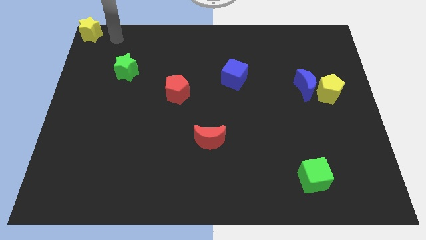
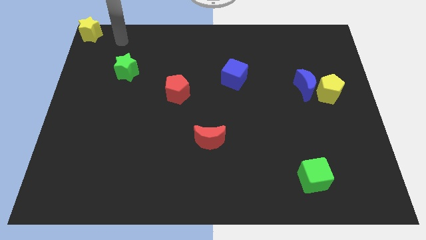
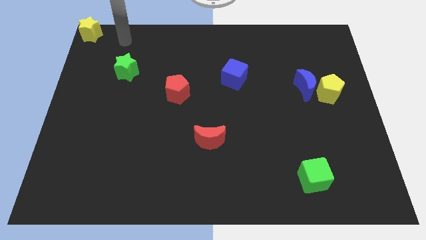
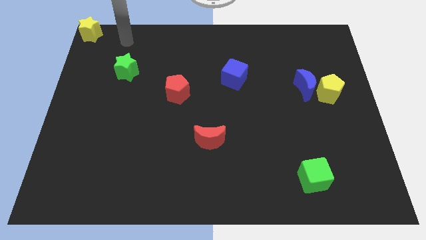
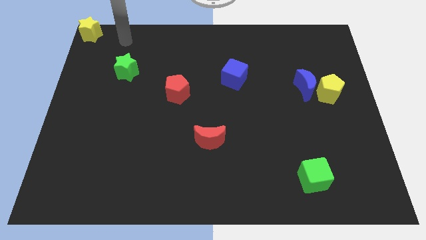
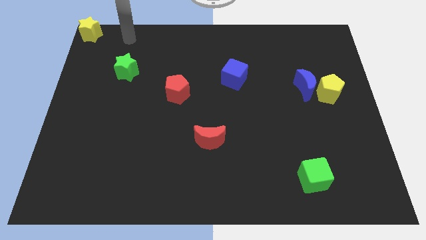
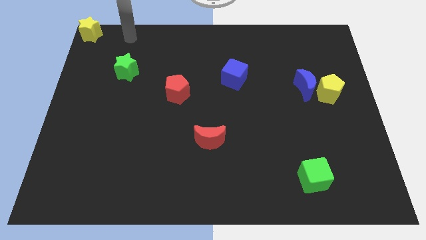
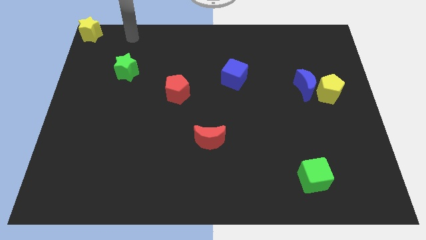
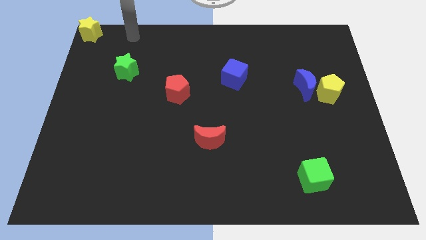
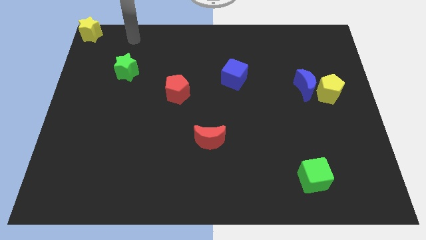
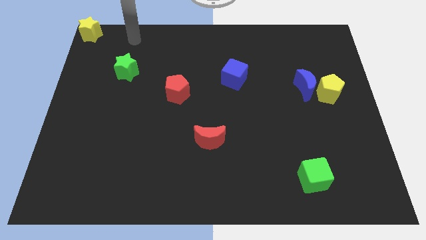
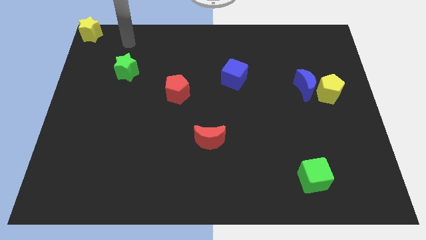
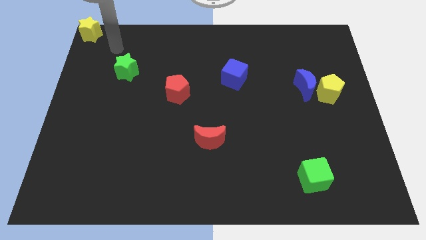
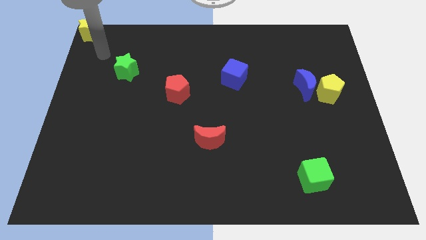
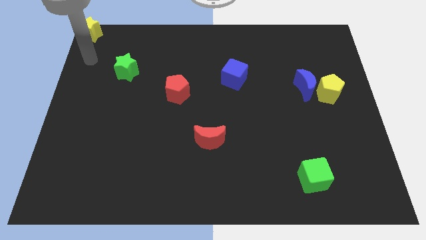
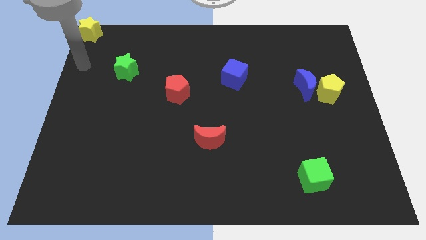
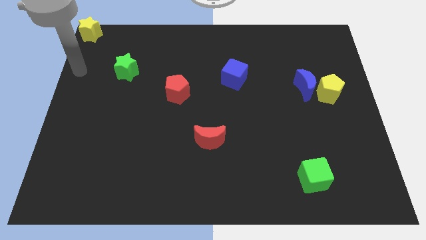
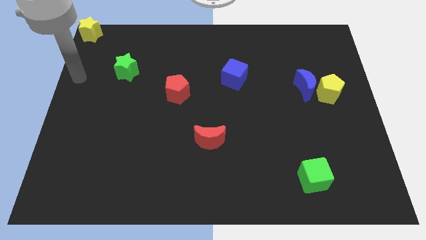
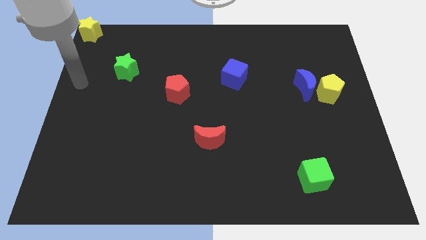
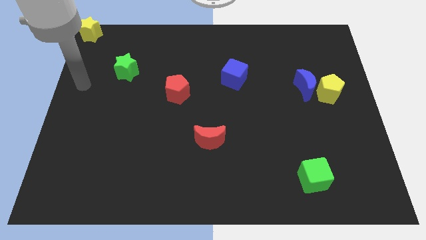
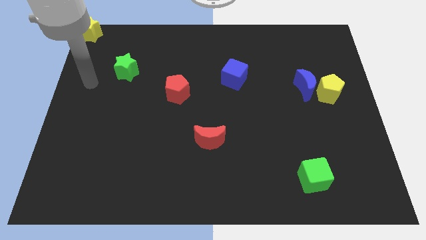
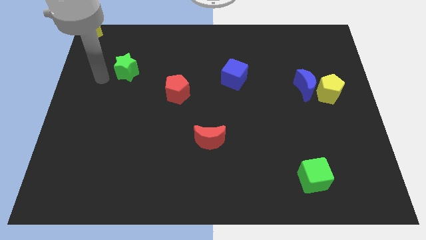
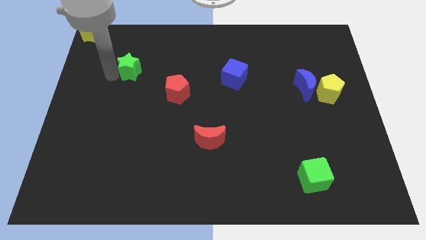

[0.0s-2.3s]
point the arm to the left of the green star

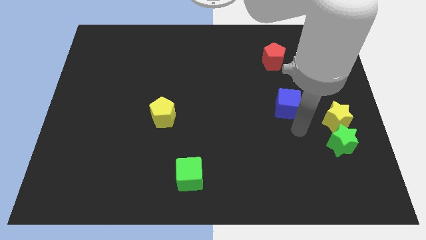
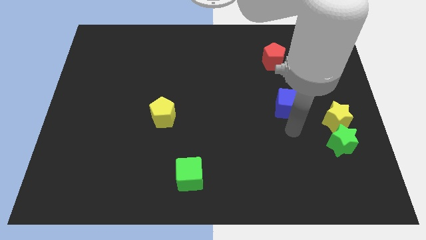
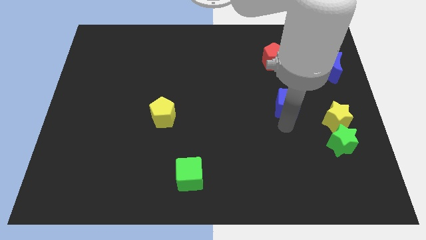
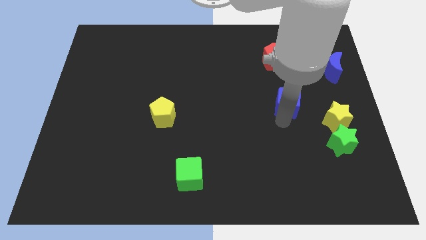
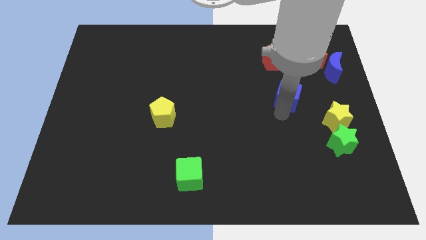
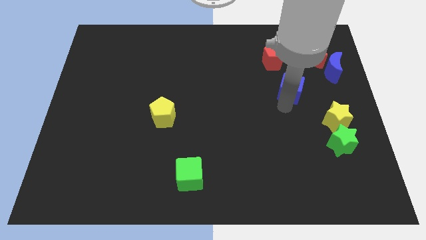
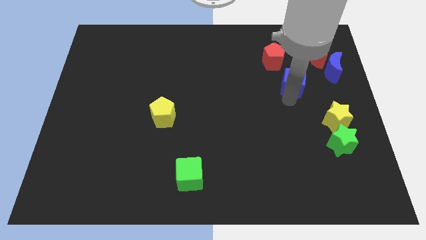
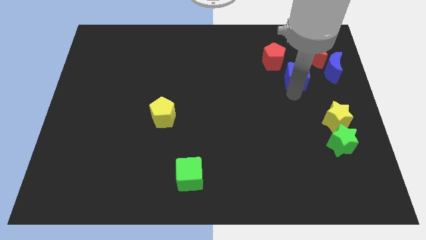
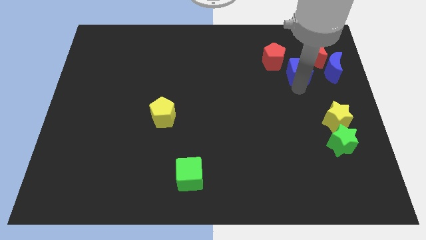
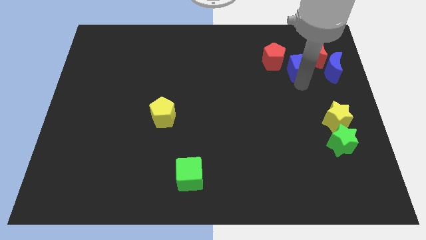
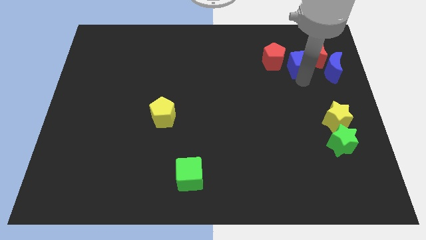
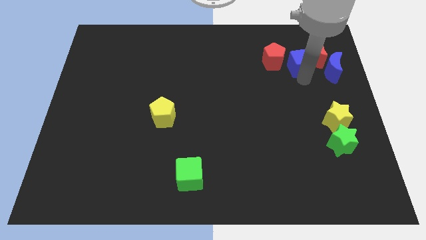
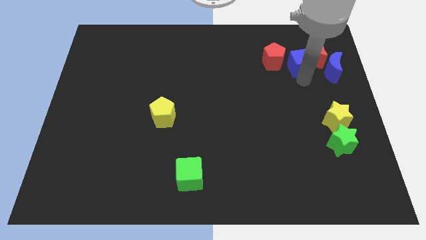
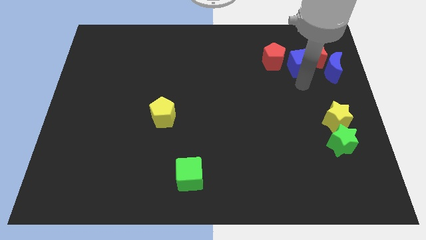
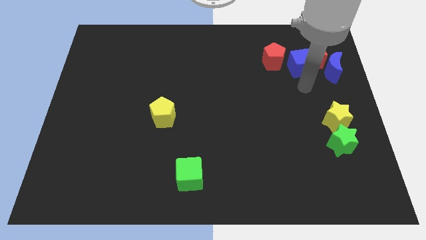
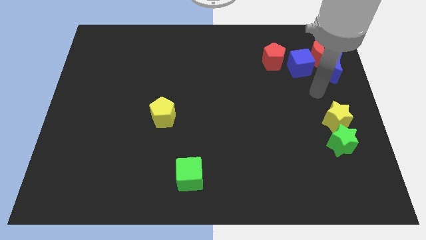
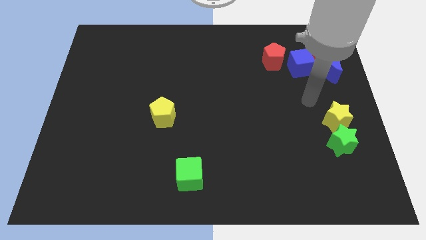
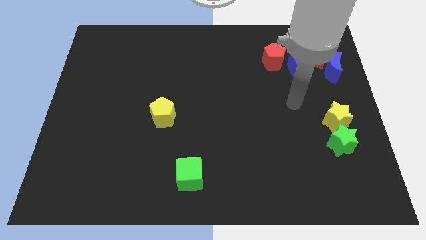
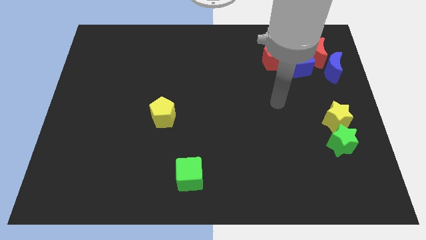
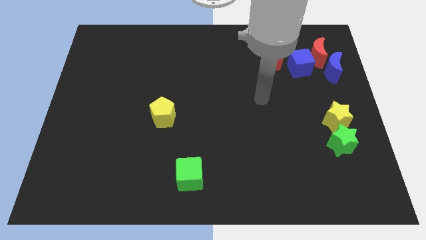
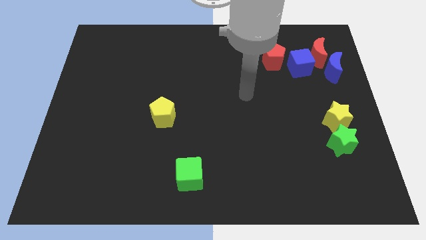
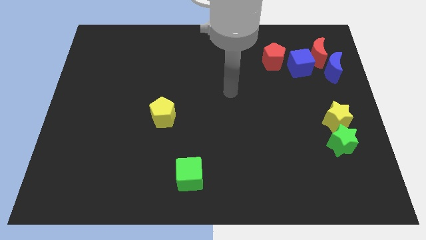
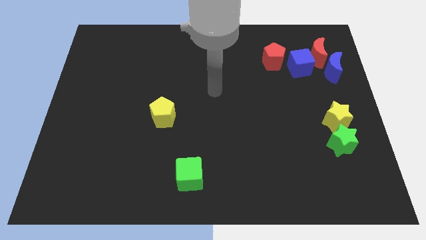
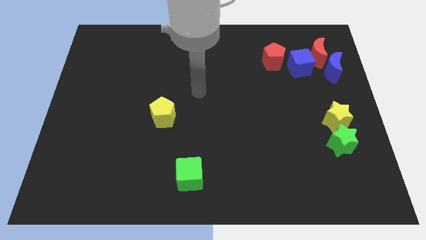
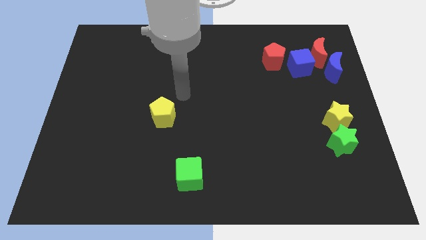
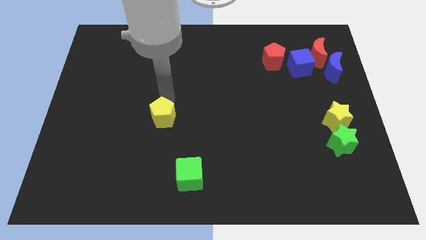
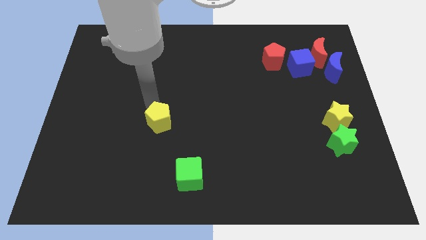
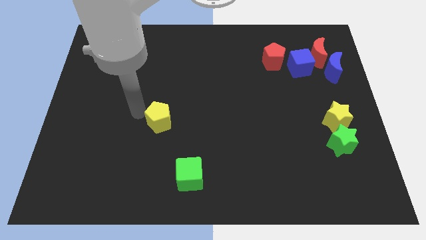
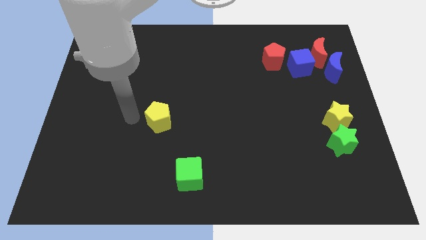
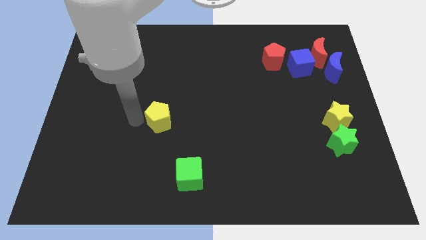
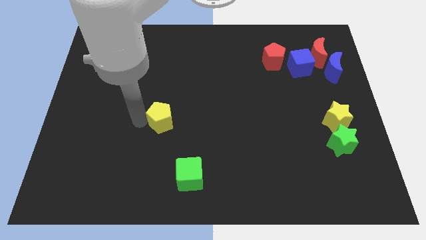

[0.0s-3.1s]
place your arm to the left of yellow pentagon

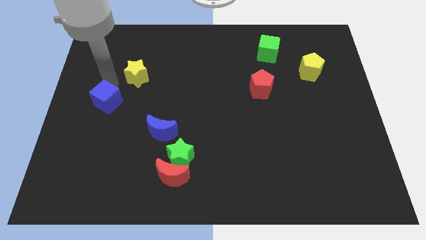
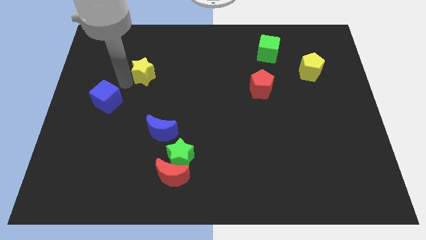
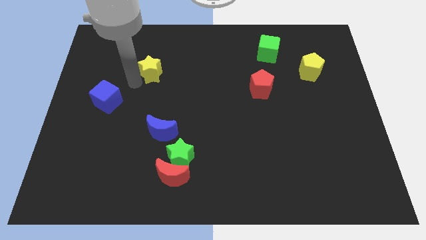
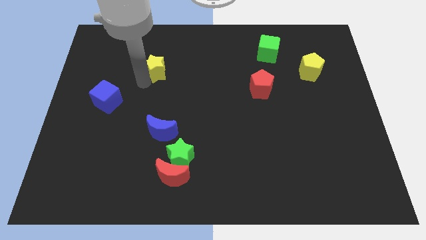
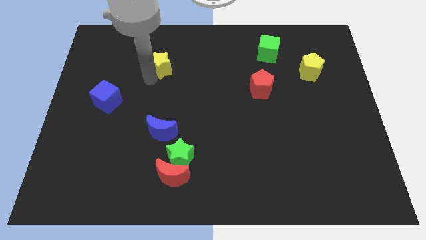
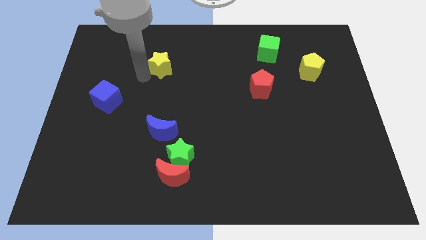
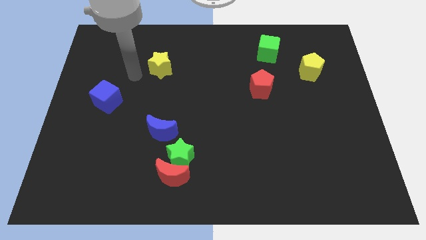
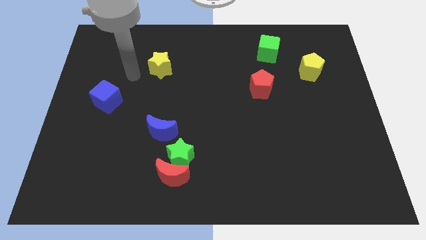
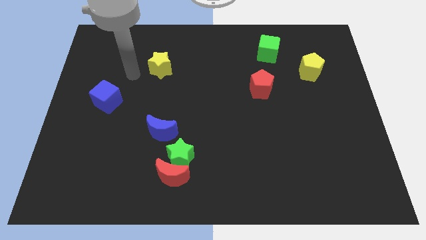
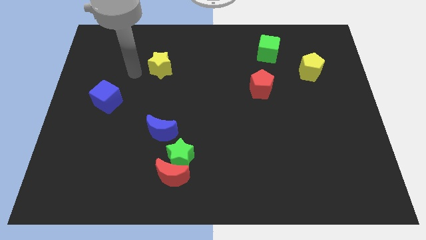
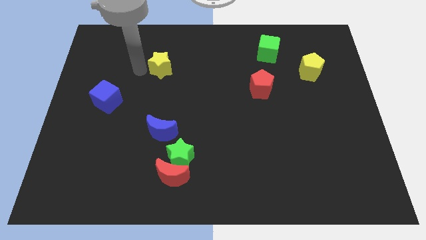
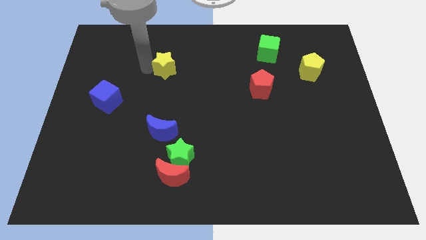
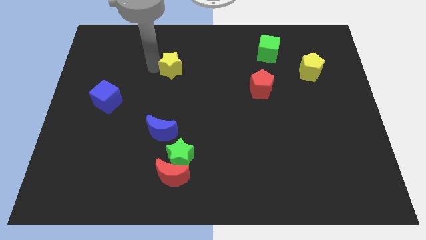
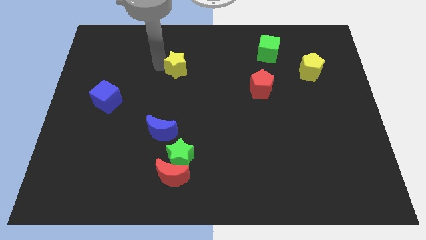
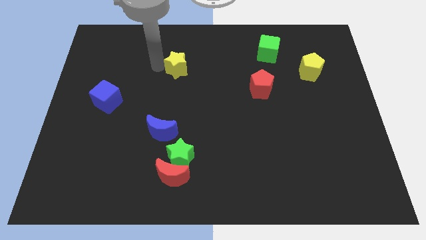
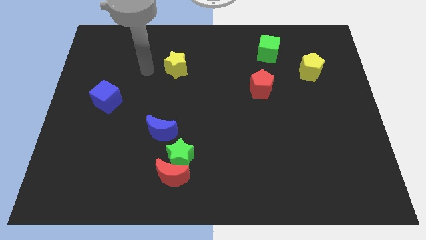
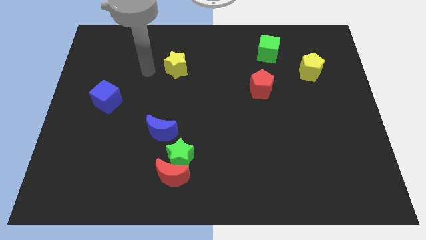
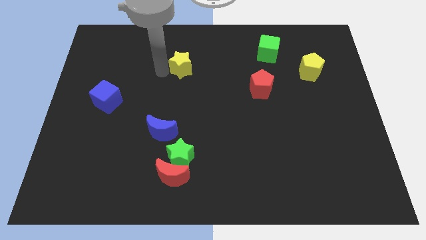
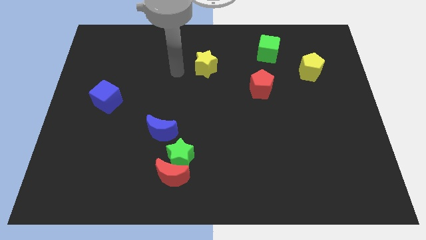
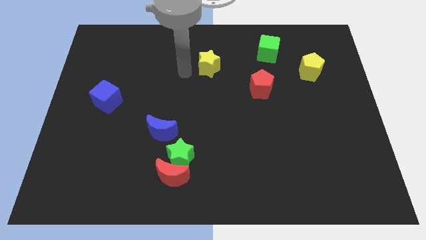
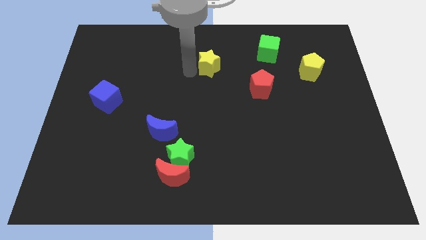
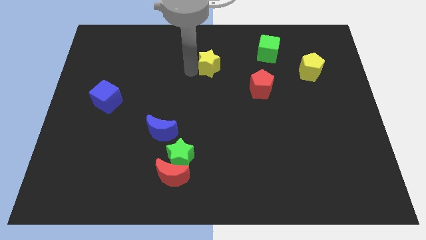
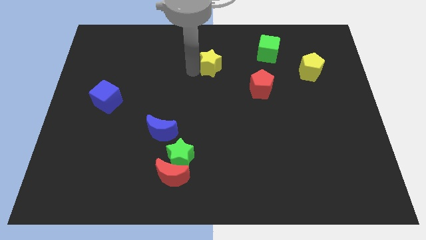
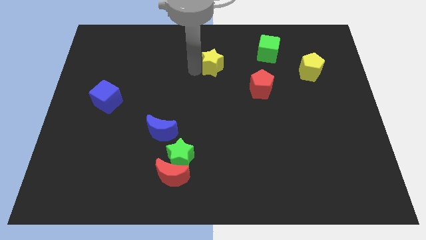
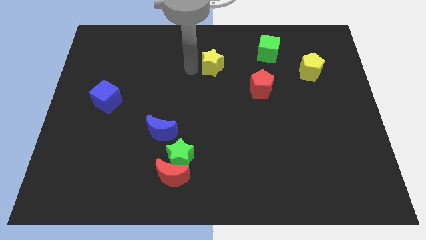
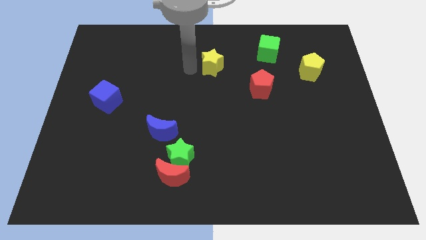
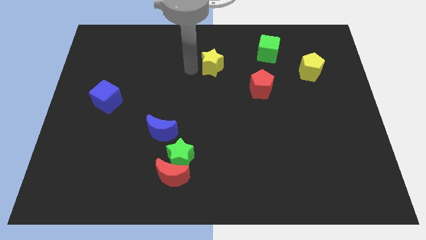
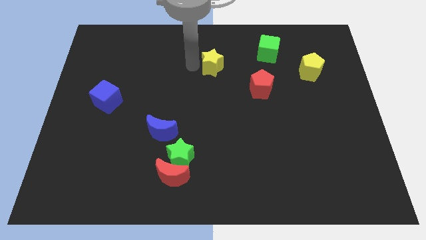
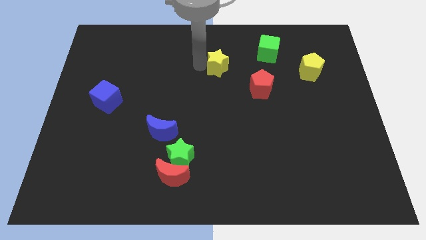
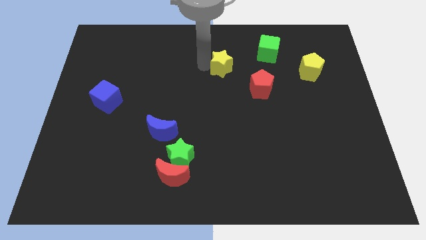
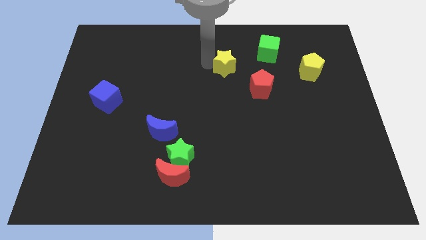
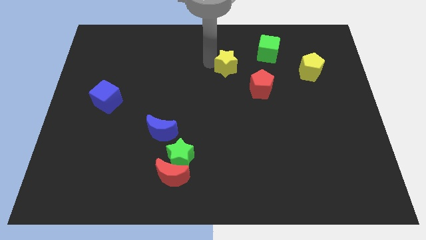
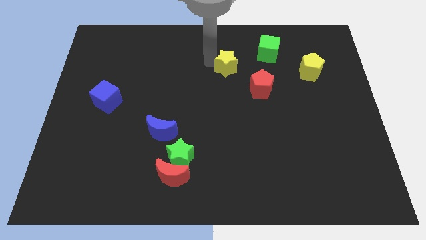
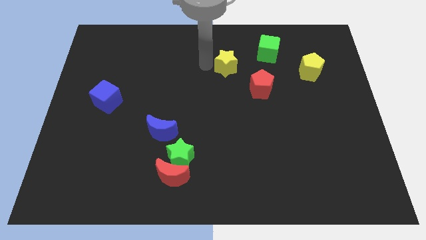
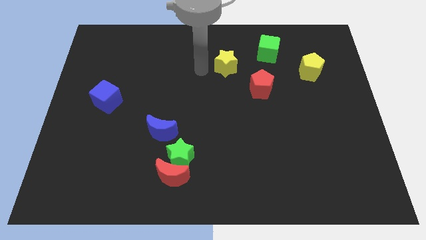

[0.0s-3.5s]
push the yellow star to the top left of the red pentagon
